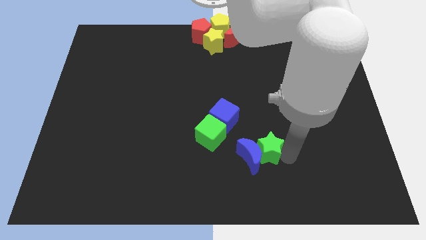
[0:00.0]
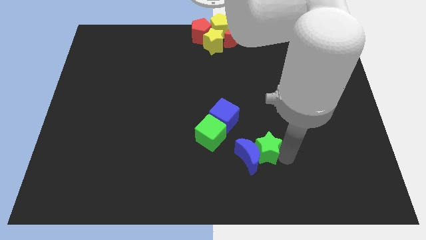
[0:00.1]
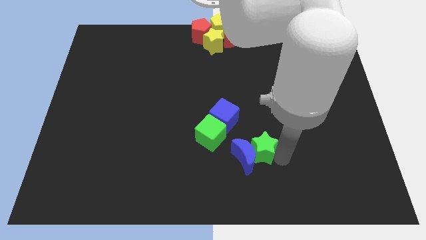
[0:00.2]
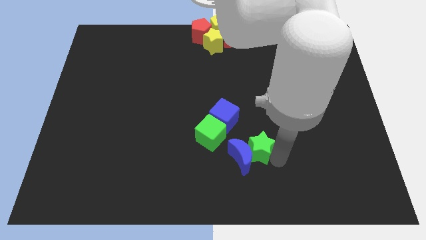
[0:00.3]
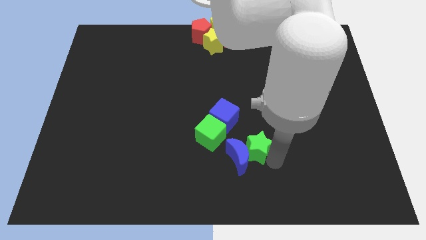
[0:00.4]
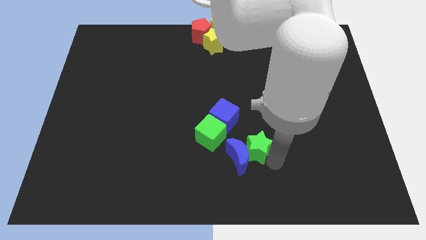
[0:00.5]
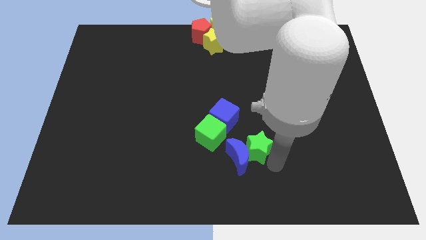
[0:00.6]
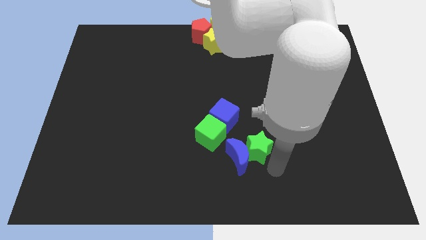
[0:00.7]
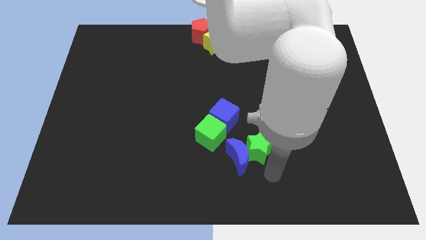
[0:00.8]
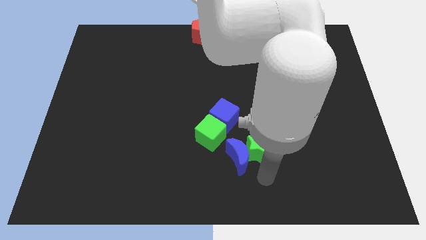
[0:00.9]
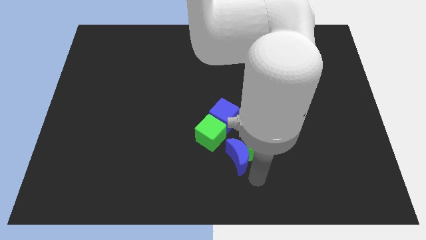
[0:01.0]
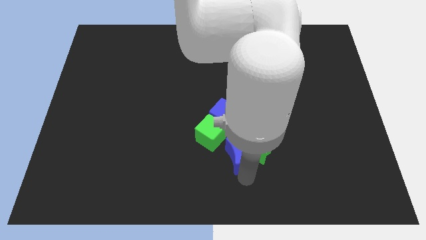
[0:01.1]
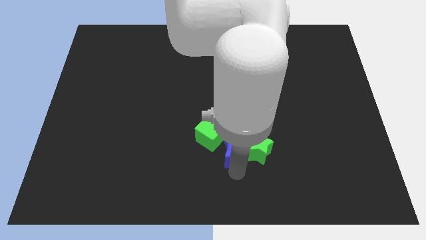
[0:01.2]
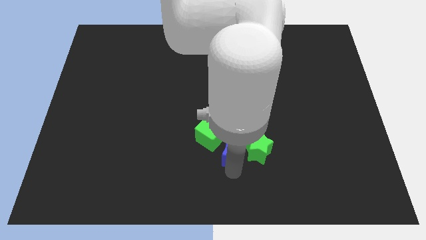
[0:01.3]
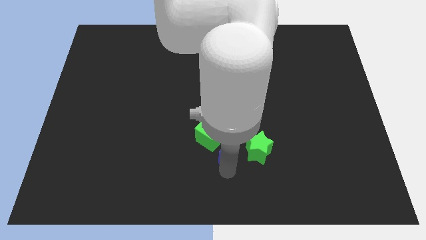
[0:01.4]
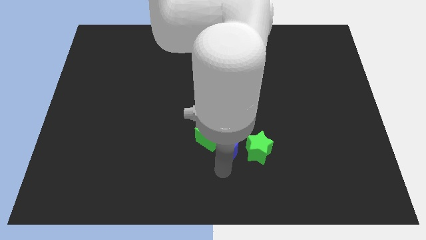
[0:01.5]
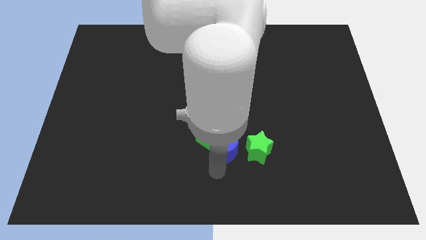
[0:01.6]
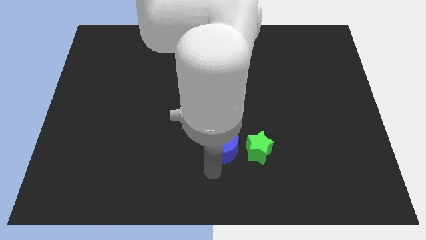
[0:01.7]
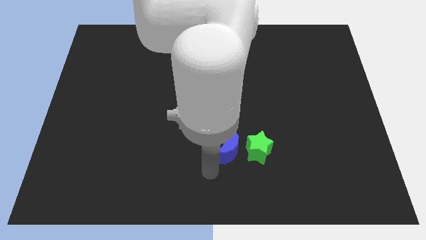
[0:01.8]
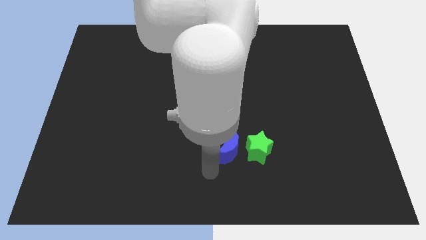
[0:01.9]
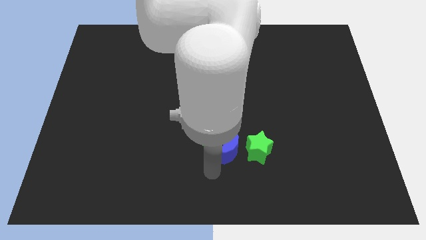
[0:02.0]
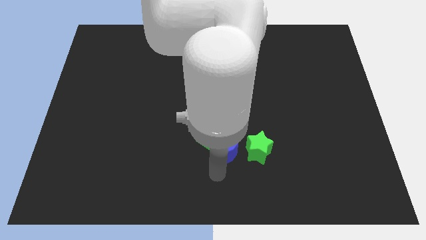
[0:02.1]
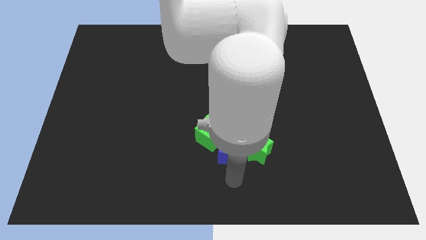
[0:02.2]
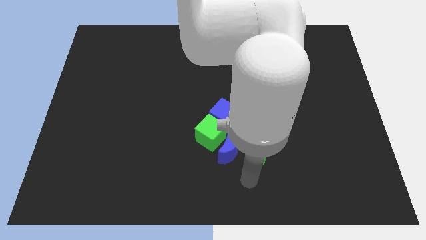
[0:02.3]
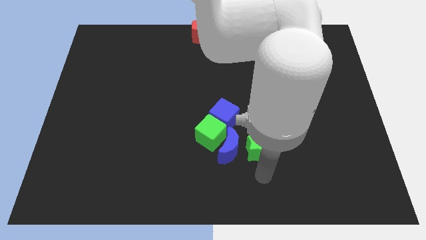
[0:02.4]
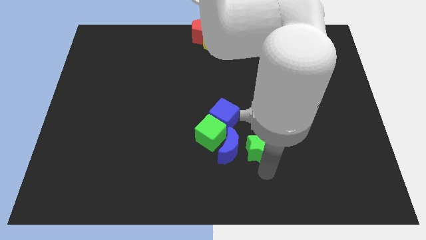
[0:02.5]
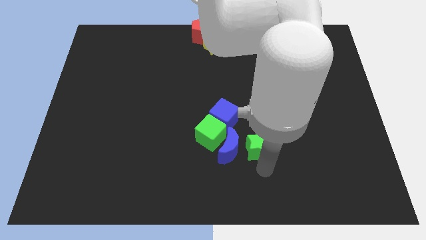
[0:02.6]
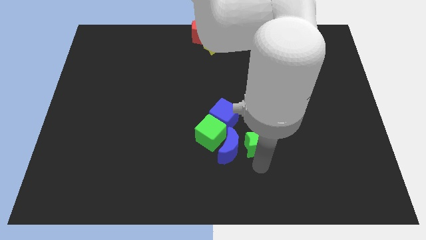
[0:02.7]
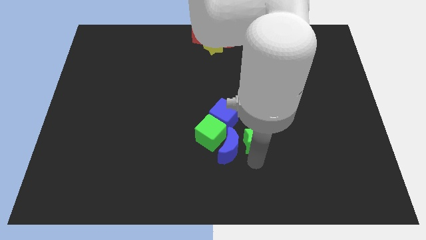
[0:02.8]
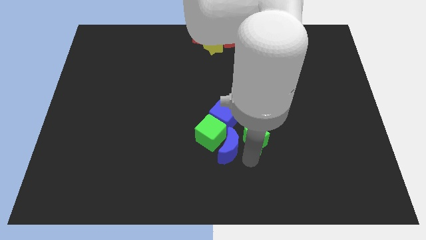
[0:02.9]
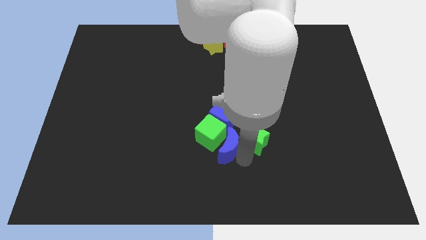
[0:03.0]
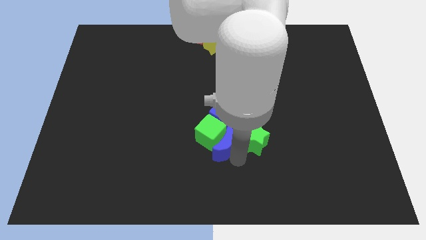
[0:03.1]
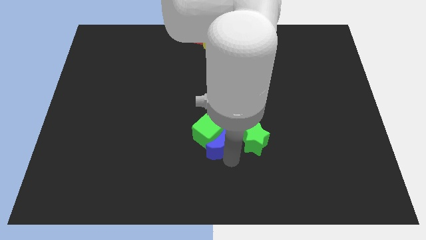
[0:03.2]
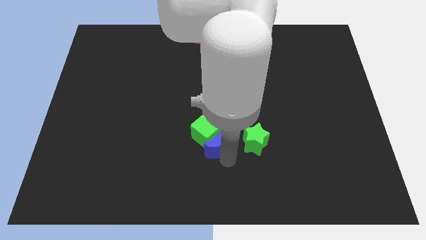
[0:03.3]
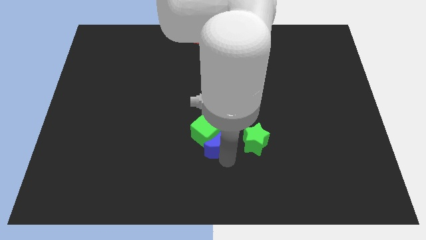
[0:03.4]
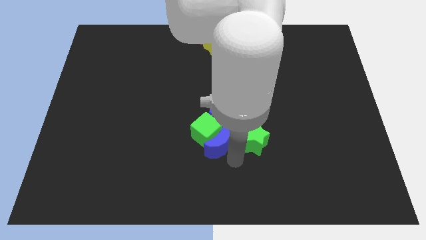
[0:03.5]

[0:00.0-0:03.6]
push the blue crescent into the green cube

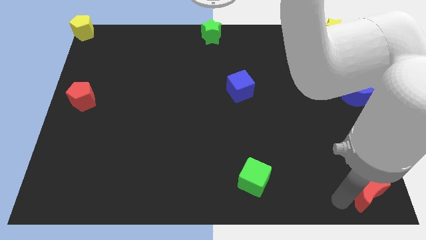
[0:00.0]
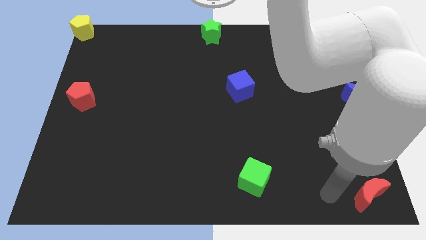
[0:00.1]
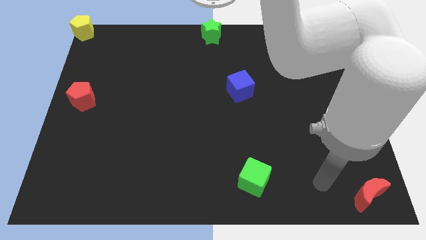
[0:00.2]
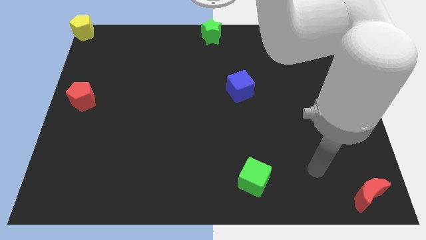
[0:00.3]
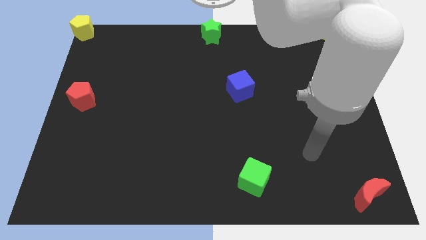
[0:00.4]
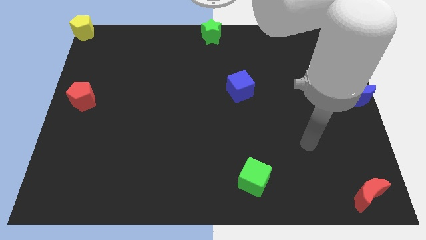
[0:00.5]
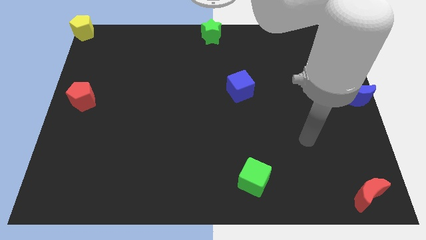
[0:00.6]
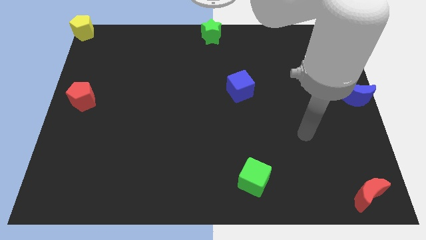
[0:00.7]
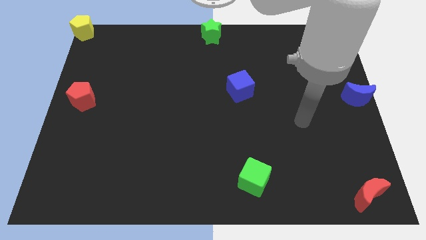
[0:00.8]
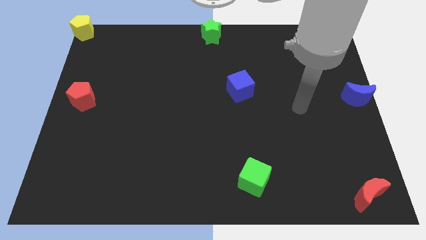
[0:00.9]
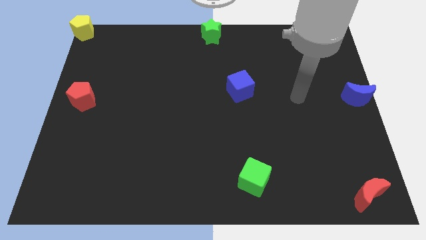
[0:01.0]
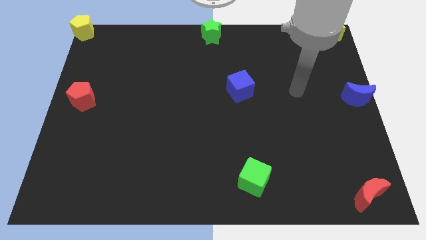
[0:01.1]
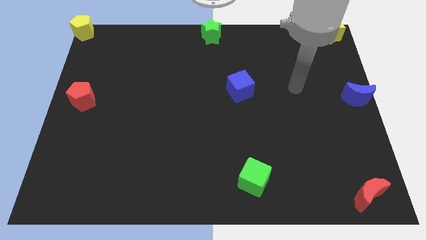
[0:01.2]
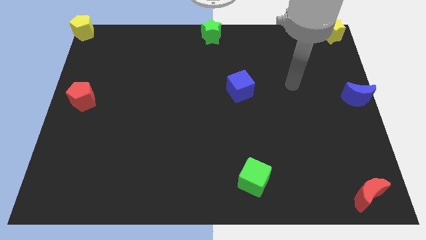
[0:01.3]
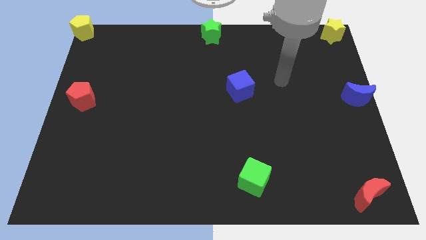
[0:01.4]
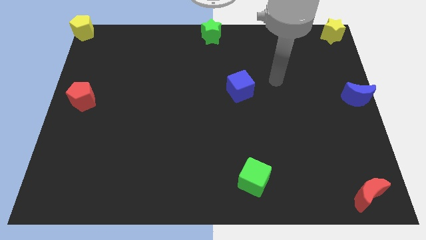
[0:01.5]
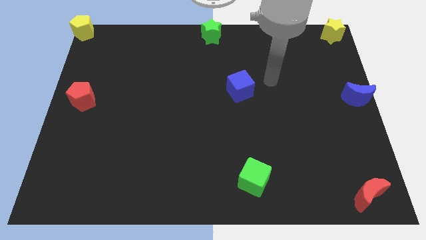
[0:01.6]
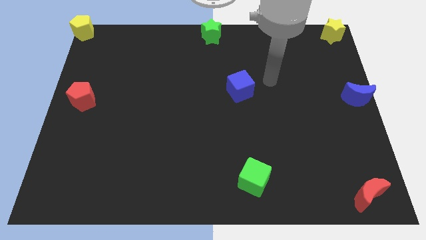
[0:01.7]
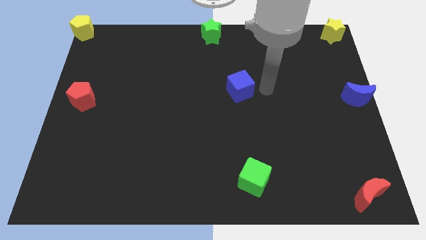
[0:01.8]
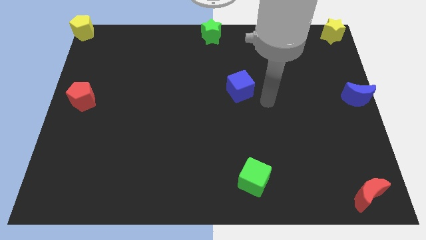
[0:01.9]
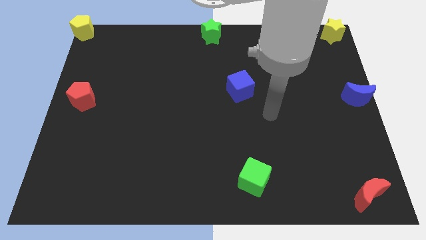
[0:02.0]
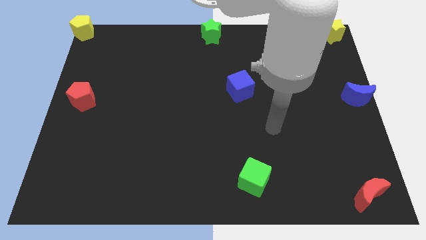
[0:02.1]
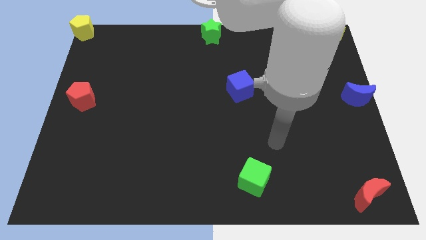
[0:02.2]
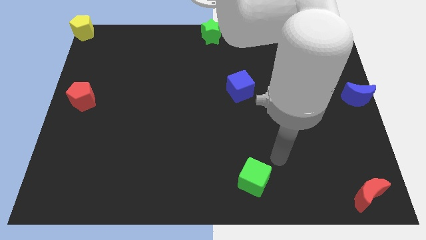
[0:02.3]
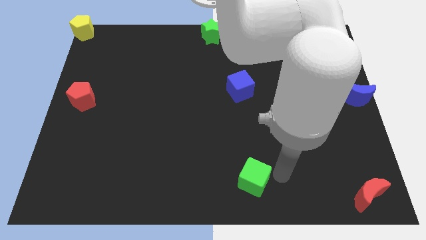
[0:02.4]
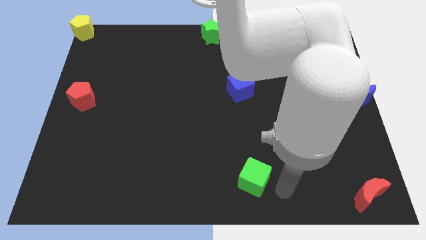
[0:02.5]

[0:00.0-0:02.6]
place your arm to the right side of green cube

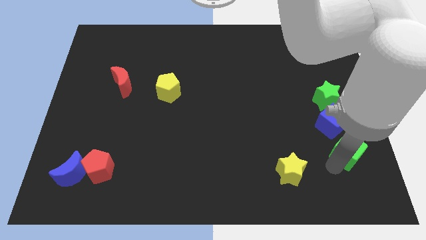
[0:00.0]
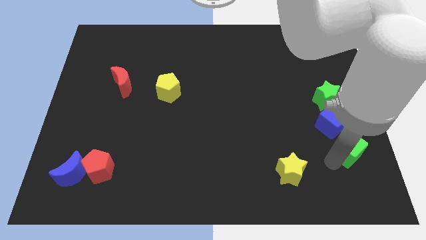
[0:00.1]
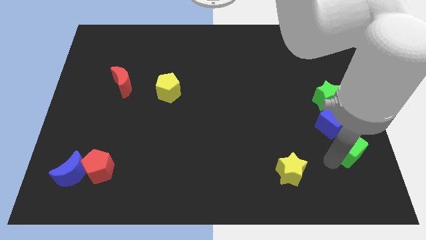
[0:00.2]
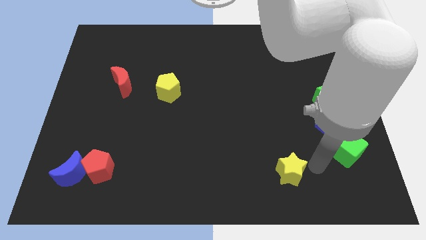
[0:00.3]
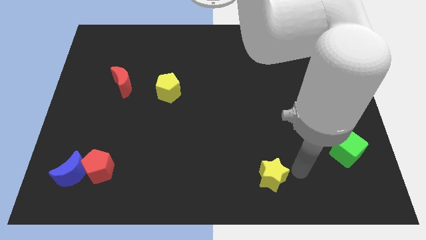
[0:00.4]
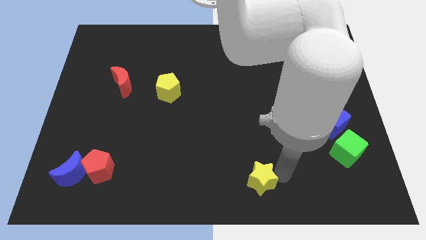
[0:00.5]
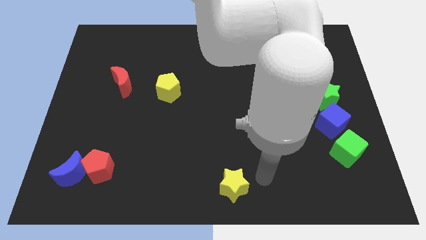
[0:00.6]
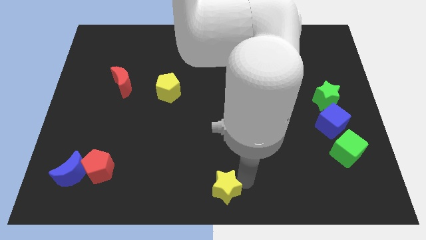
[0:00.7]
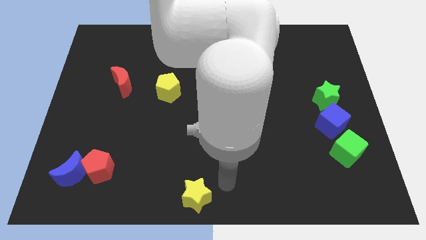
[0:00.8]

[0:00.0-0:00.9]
push the yellow star to the bottom center of the board

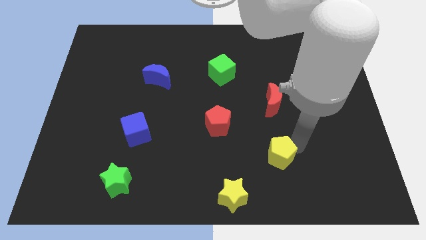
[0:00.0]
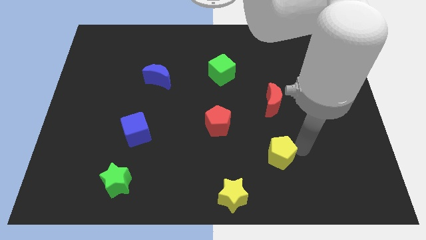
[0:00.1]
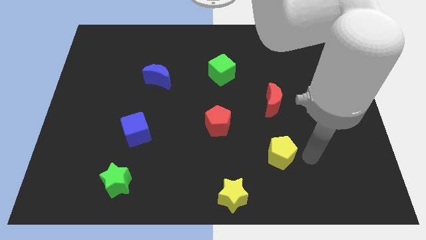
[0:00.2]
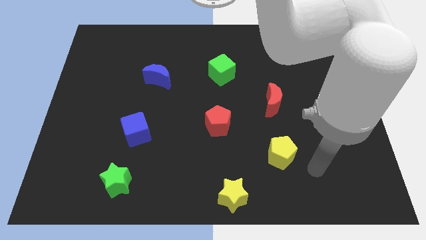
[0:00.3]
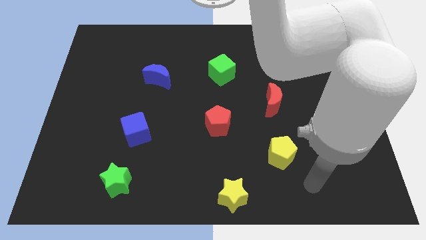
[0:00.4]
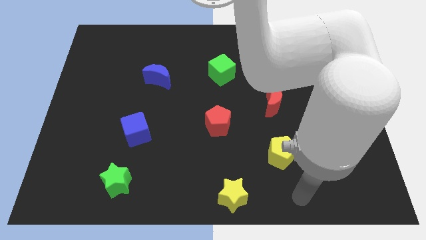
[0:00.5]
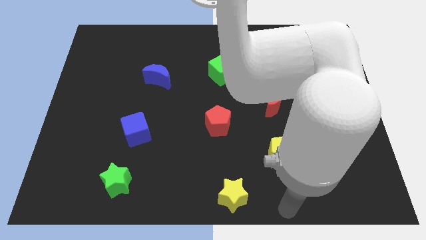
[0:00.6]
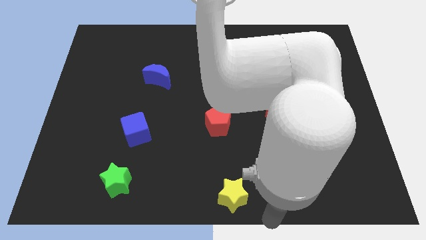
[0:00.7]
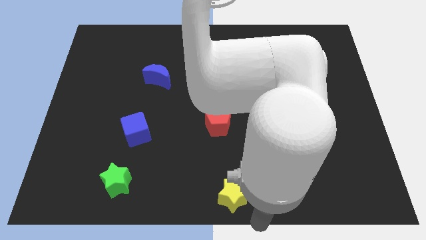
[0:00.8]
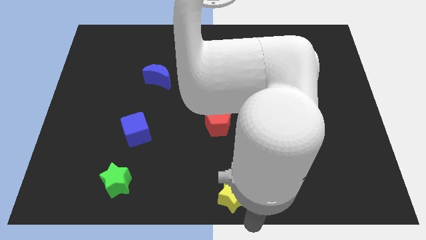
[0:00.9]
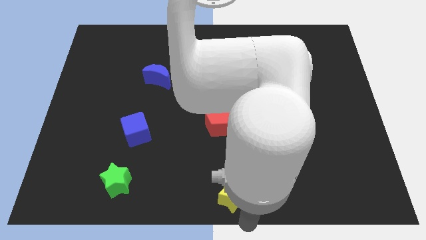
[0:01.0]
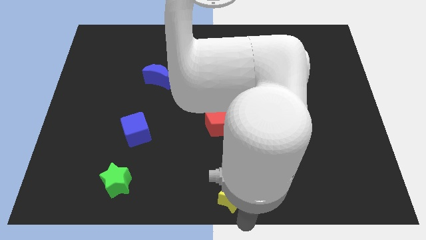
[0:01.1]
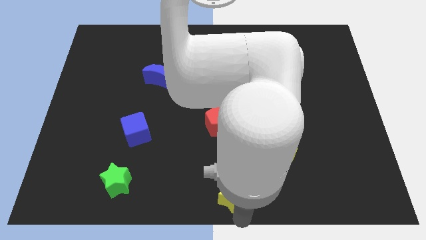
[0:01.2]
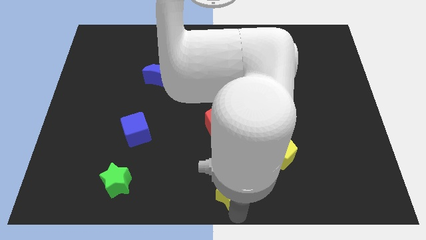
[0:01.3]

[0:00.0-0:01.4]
tap the bottom side of the yellow star

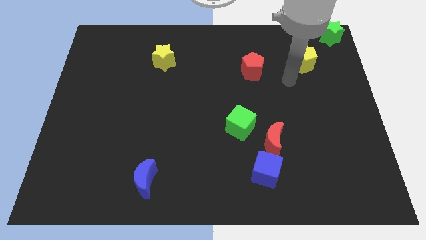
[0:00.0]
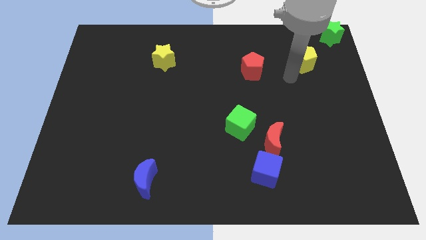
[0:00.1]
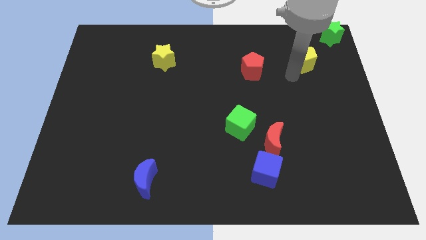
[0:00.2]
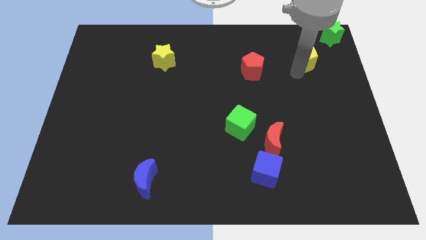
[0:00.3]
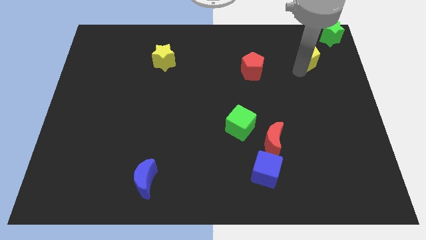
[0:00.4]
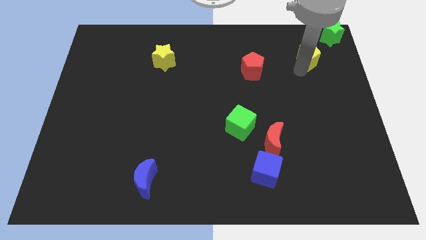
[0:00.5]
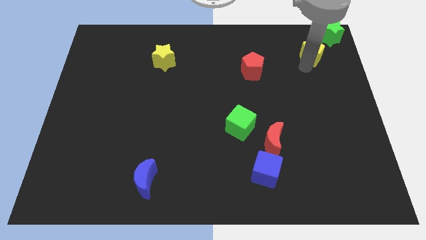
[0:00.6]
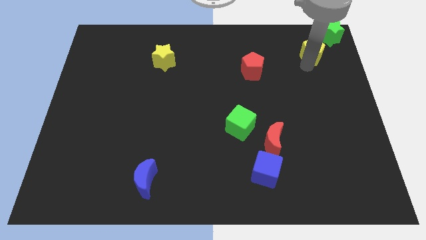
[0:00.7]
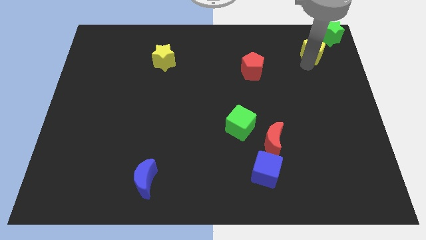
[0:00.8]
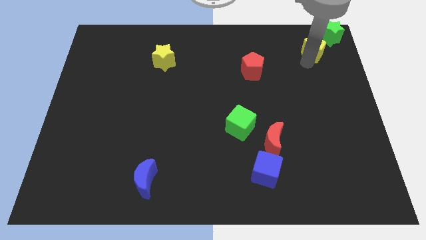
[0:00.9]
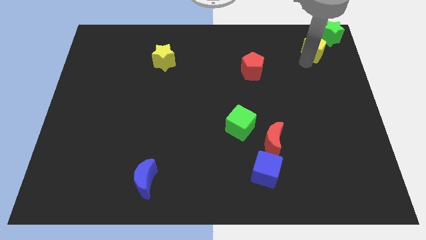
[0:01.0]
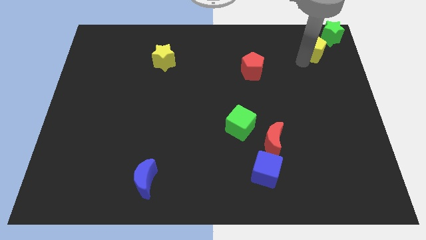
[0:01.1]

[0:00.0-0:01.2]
place yellow pentagon diagonal to green star
